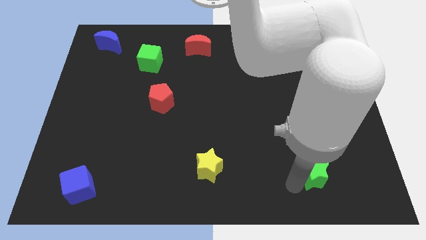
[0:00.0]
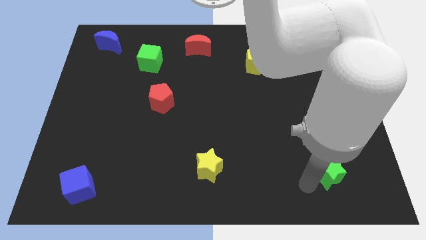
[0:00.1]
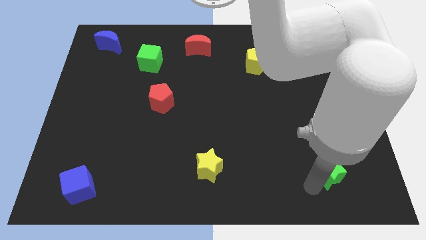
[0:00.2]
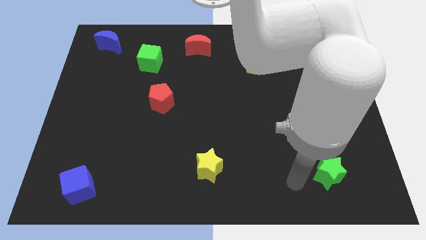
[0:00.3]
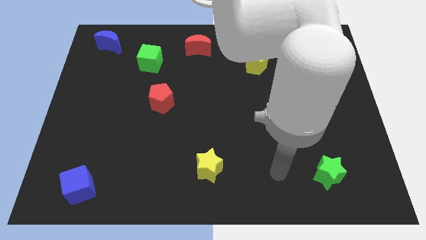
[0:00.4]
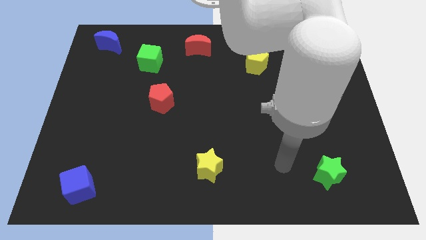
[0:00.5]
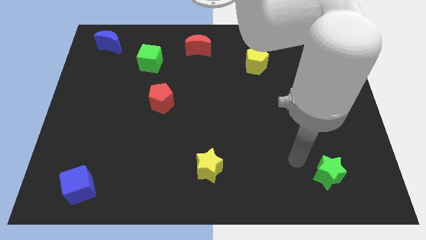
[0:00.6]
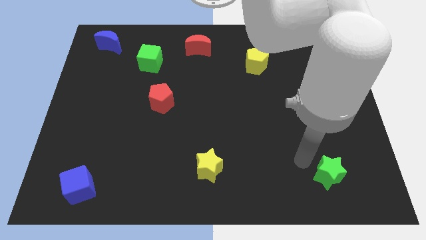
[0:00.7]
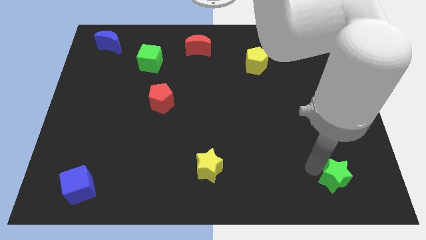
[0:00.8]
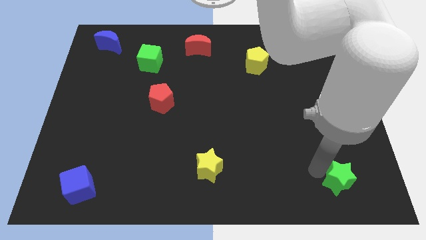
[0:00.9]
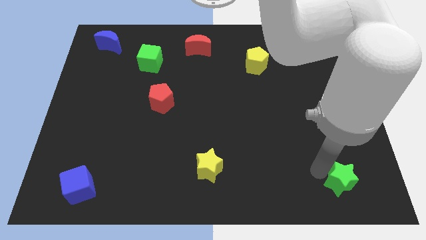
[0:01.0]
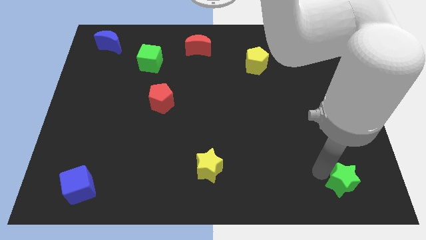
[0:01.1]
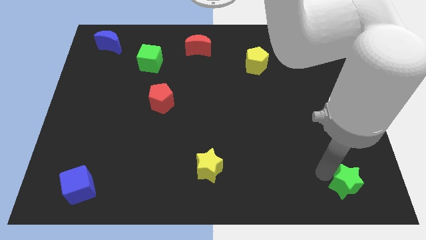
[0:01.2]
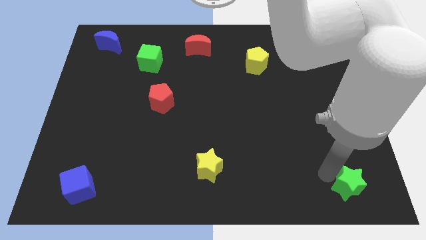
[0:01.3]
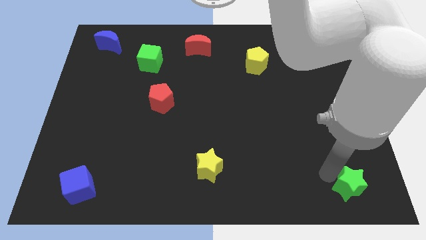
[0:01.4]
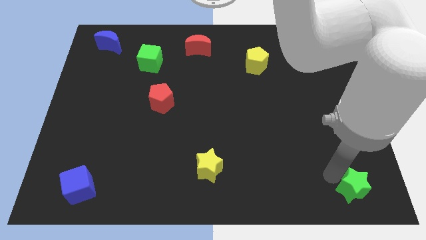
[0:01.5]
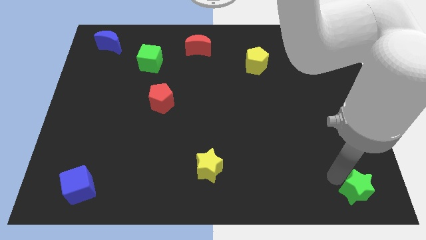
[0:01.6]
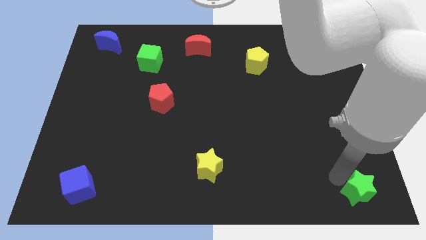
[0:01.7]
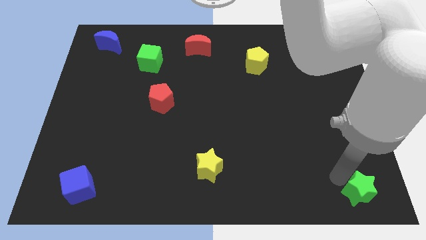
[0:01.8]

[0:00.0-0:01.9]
move the green star towards the bottom right

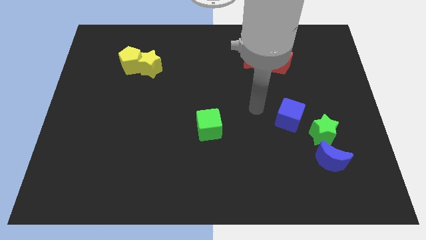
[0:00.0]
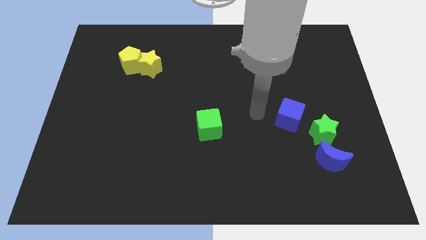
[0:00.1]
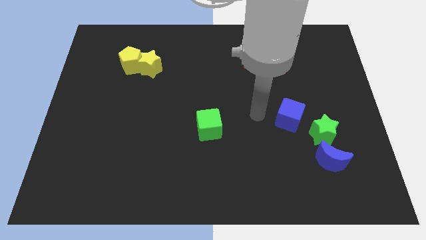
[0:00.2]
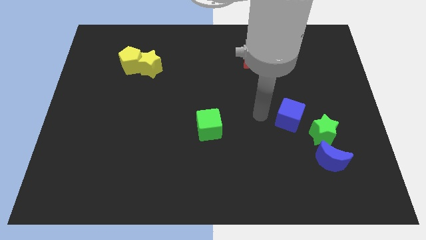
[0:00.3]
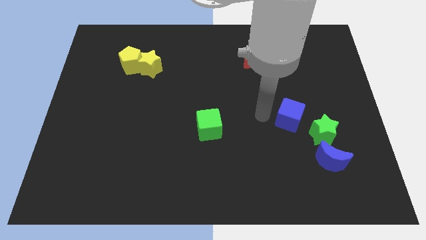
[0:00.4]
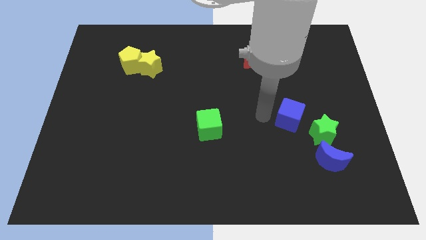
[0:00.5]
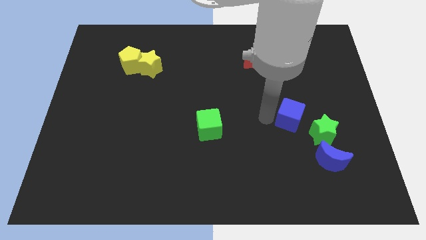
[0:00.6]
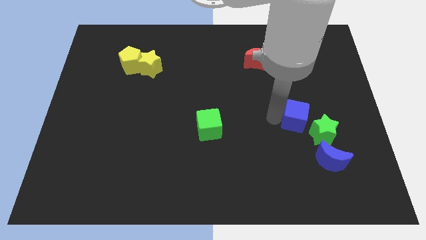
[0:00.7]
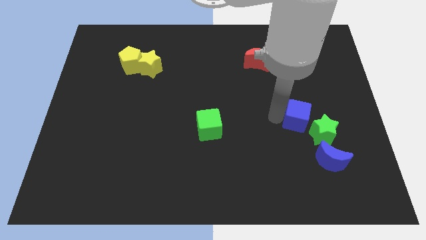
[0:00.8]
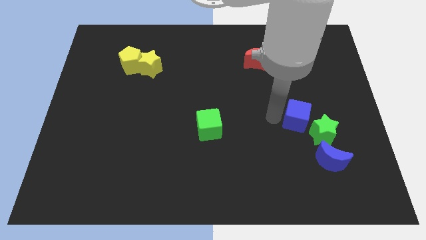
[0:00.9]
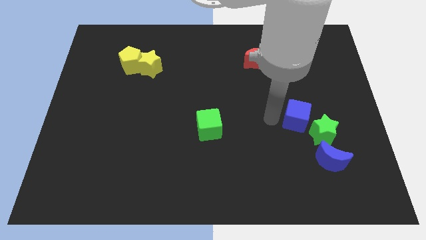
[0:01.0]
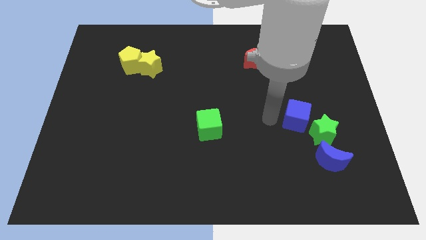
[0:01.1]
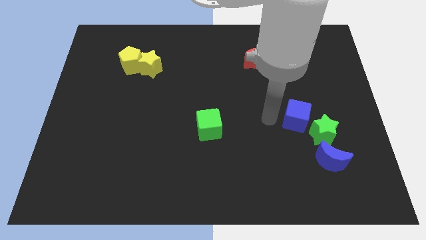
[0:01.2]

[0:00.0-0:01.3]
touch the blue block

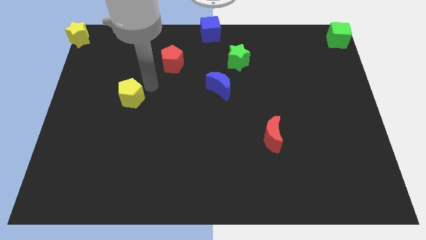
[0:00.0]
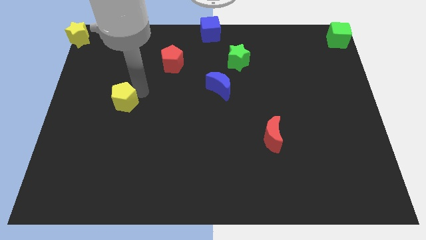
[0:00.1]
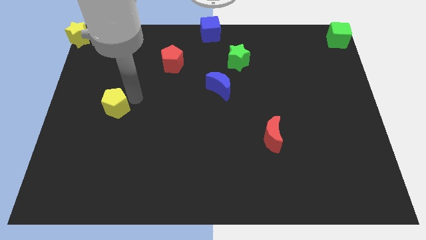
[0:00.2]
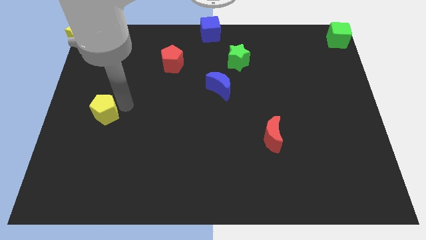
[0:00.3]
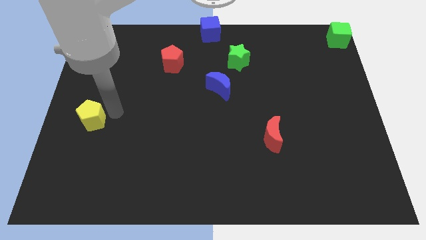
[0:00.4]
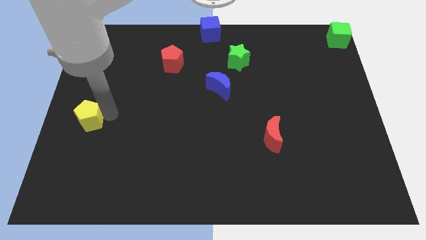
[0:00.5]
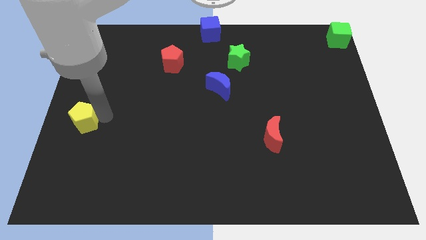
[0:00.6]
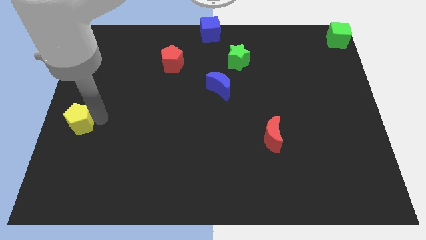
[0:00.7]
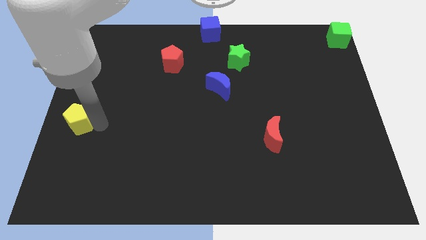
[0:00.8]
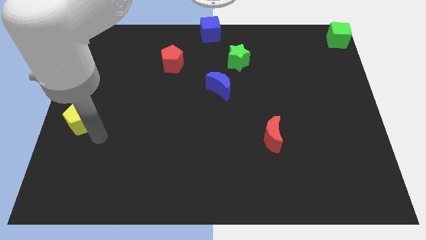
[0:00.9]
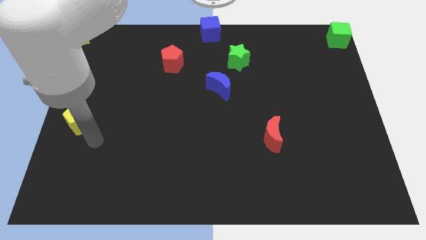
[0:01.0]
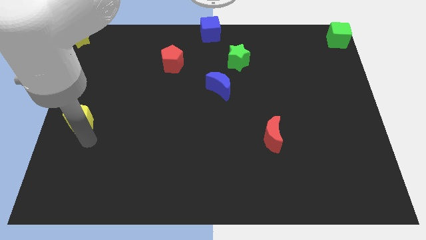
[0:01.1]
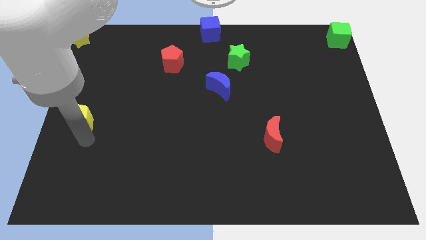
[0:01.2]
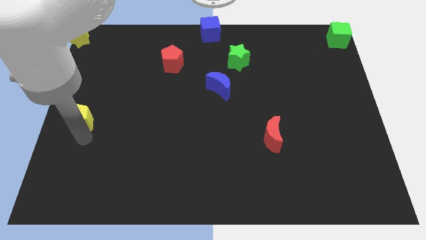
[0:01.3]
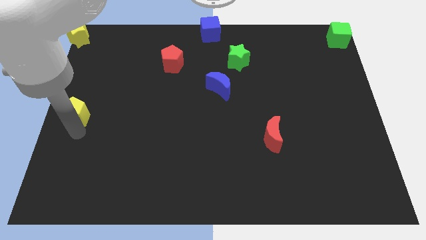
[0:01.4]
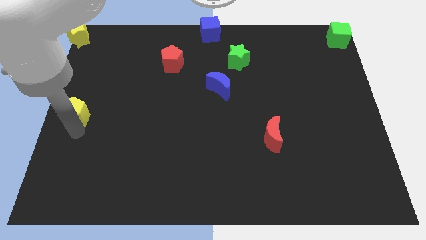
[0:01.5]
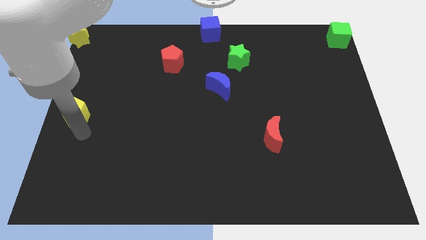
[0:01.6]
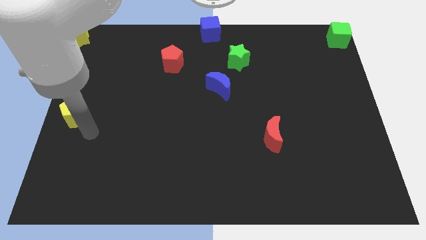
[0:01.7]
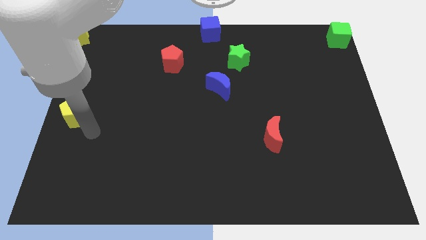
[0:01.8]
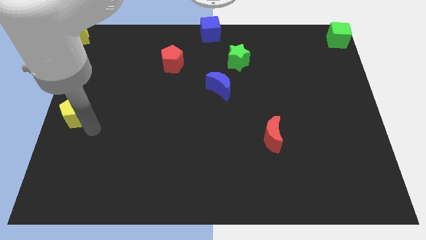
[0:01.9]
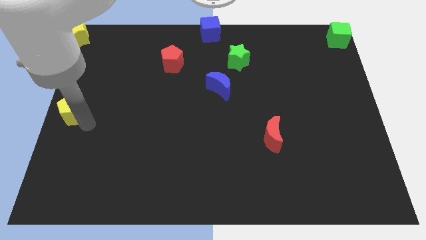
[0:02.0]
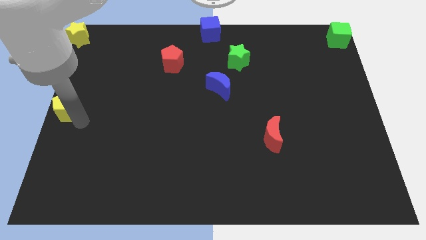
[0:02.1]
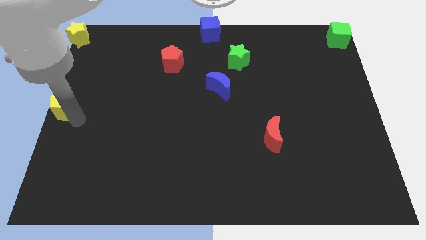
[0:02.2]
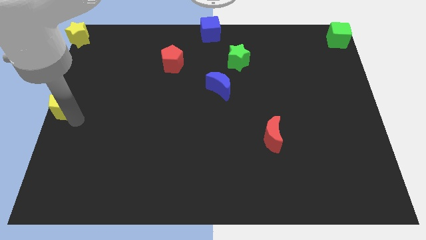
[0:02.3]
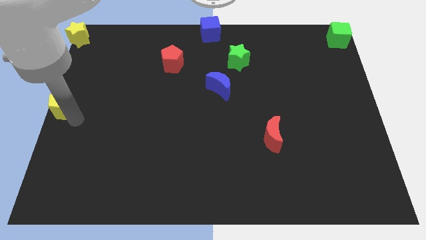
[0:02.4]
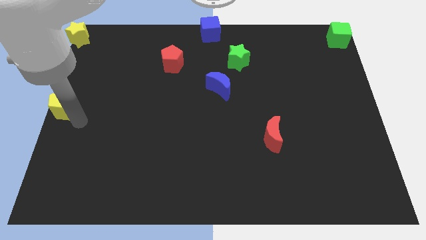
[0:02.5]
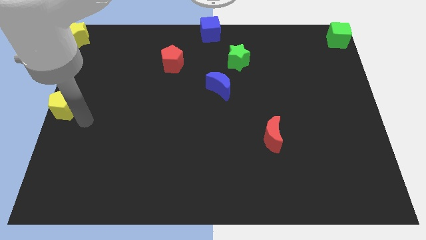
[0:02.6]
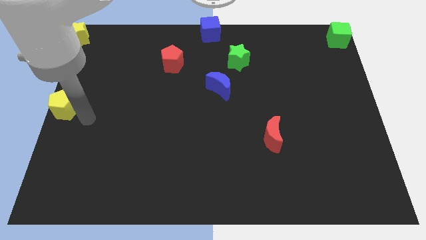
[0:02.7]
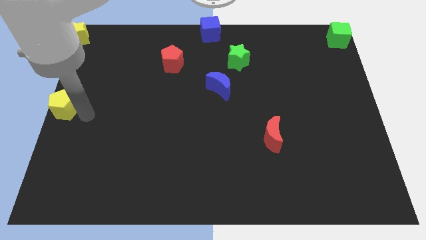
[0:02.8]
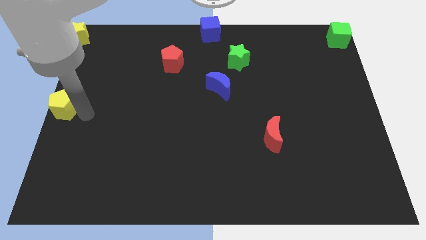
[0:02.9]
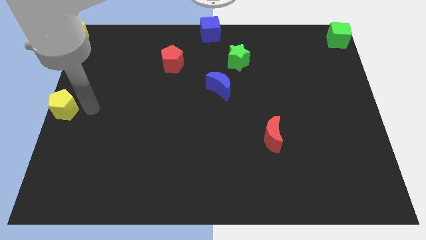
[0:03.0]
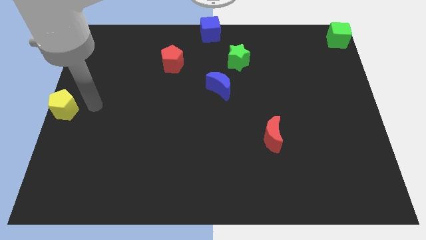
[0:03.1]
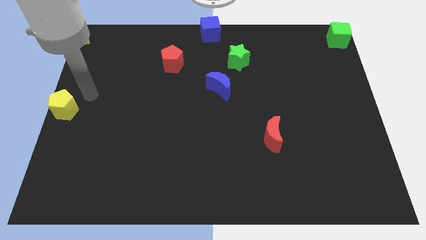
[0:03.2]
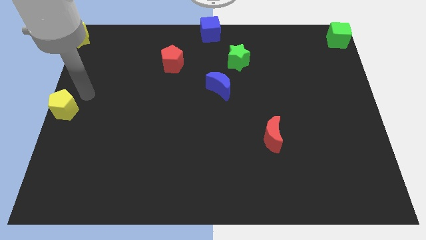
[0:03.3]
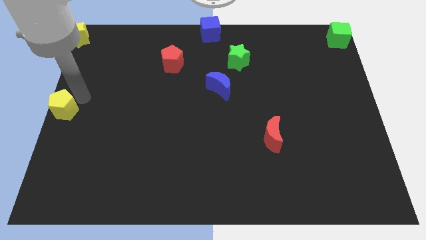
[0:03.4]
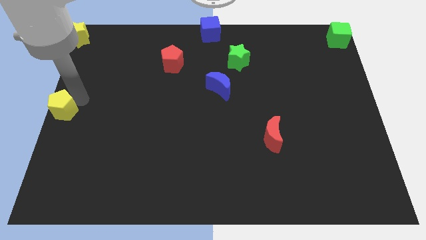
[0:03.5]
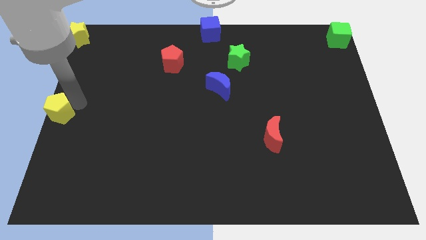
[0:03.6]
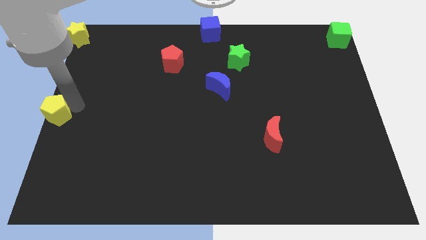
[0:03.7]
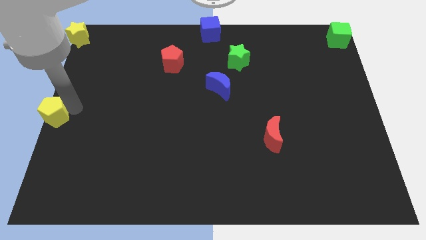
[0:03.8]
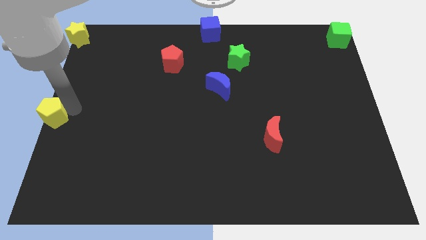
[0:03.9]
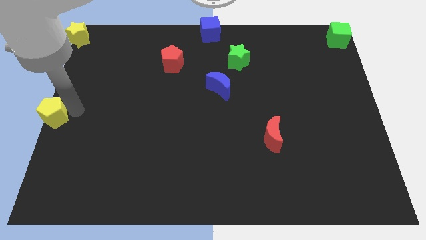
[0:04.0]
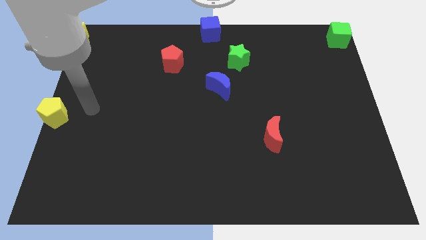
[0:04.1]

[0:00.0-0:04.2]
place the yellow pentagon to the center left side

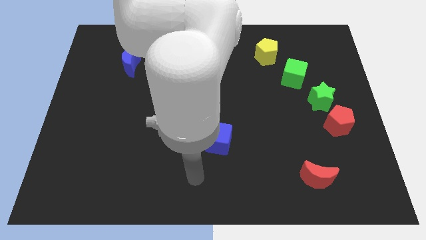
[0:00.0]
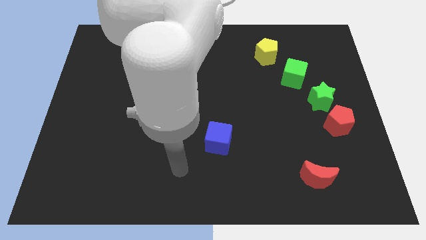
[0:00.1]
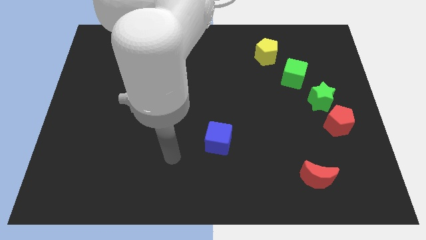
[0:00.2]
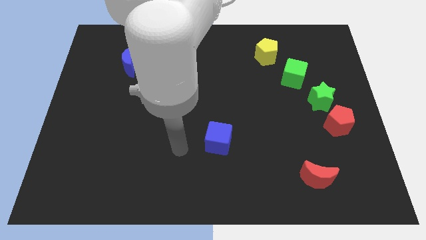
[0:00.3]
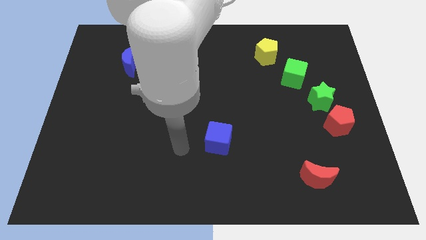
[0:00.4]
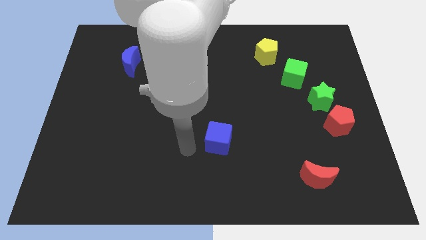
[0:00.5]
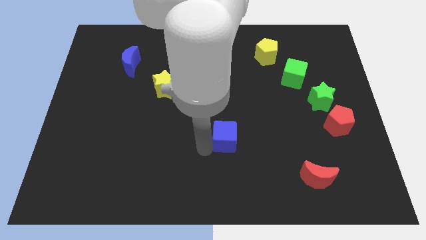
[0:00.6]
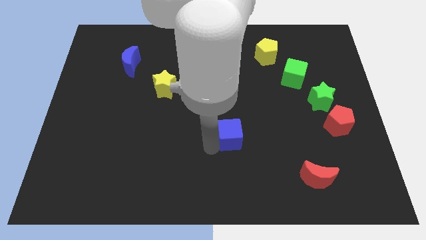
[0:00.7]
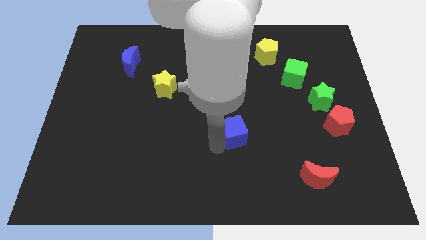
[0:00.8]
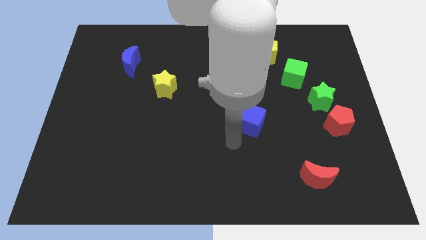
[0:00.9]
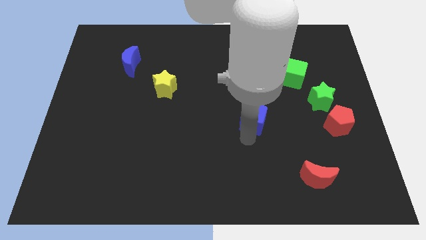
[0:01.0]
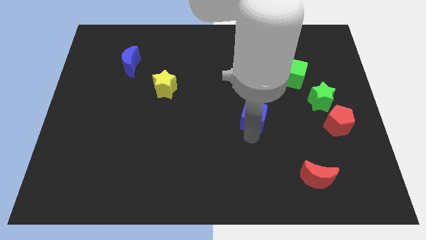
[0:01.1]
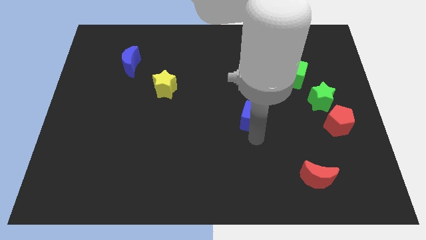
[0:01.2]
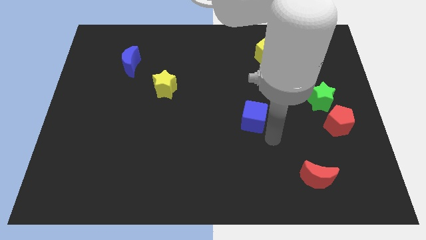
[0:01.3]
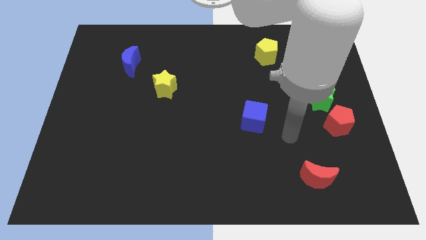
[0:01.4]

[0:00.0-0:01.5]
move the blue cube to the left side of the red pentagon

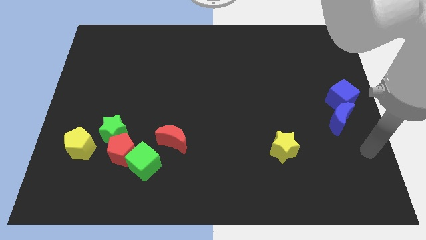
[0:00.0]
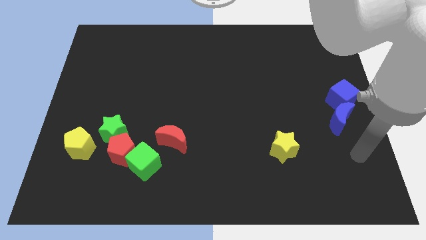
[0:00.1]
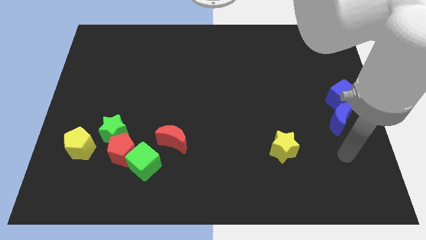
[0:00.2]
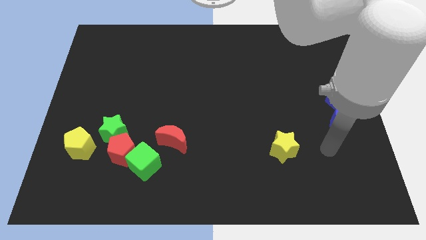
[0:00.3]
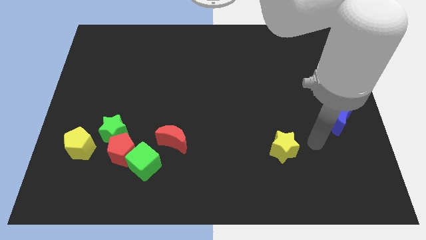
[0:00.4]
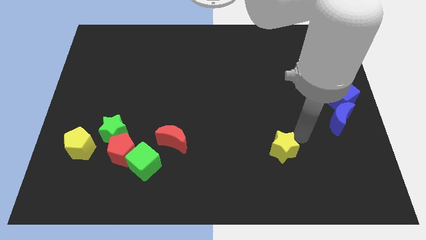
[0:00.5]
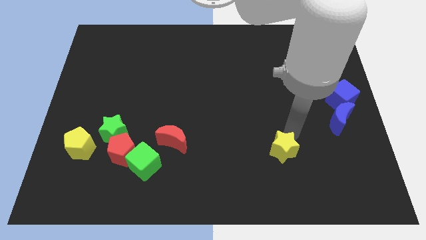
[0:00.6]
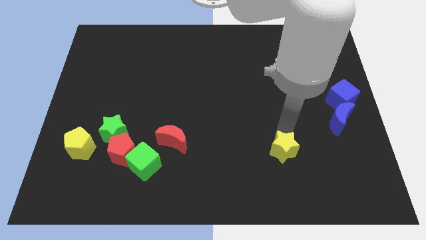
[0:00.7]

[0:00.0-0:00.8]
place arm above yellow star
